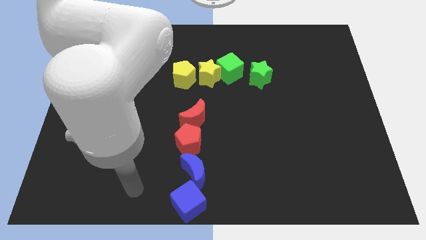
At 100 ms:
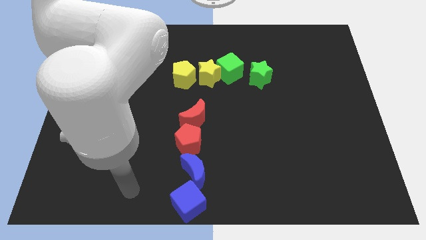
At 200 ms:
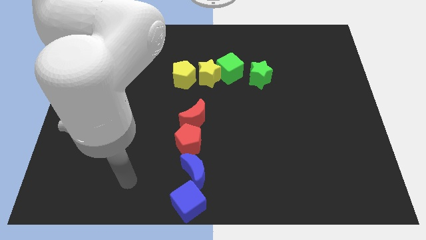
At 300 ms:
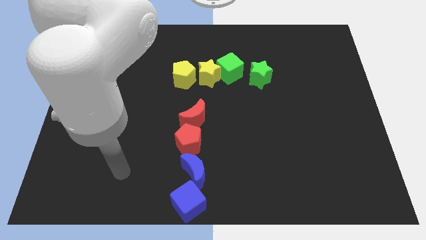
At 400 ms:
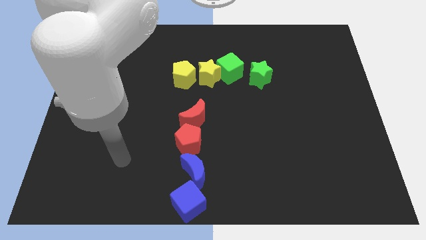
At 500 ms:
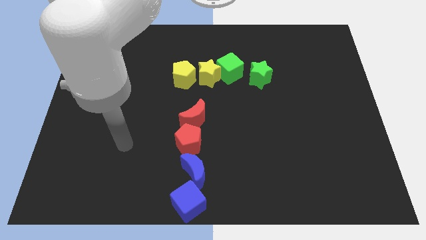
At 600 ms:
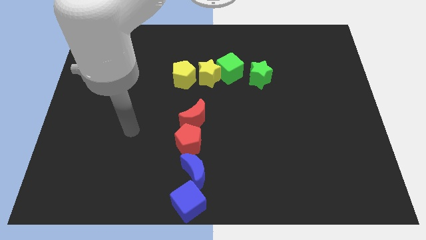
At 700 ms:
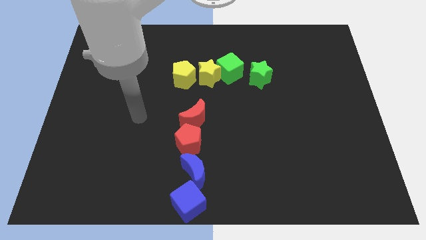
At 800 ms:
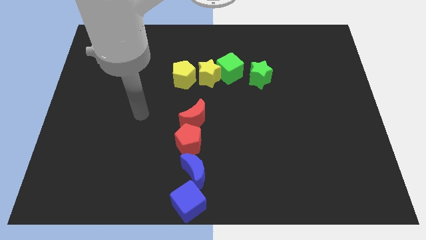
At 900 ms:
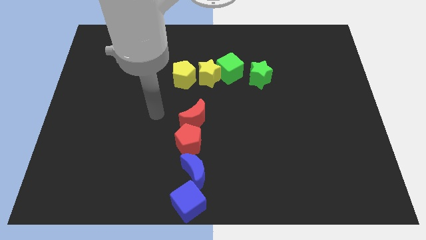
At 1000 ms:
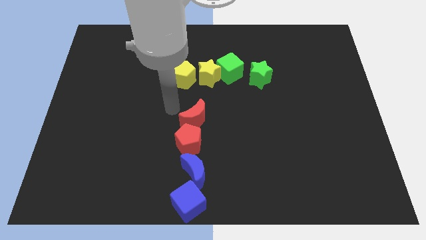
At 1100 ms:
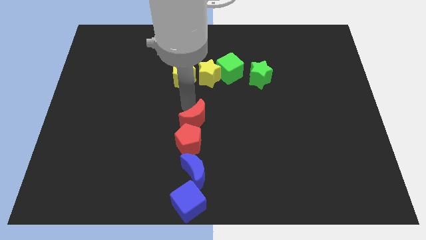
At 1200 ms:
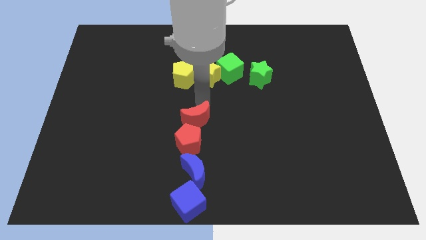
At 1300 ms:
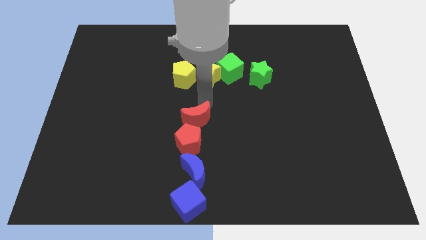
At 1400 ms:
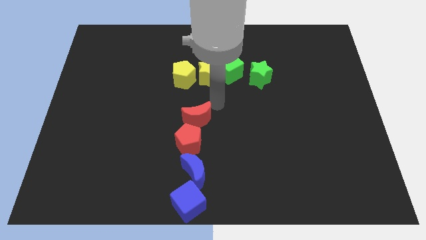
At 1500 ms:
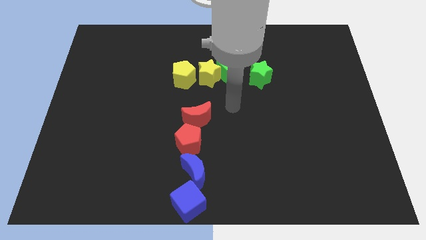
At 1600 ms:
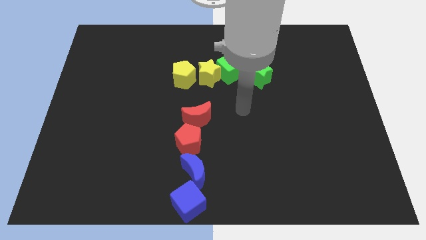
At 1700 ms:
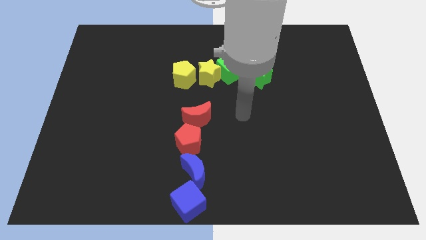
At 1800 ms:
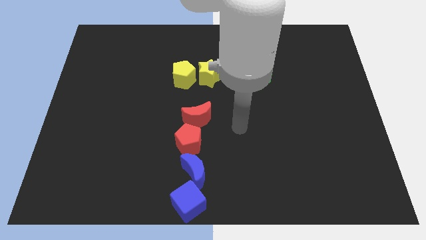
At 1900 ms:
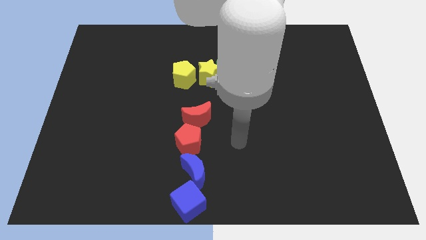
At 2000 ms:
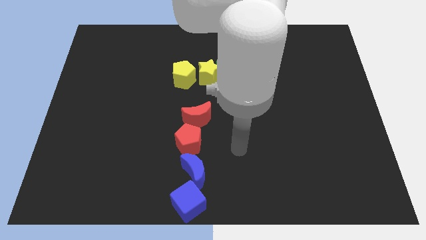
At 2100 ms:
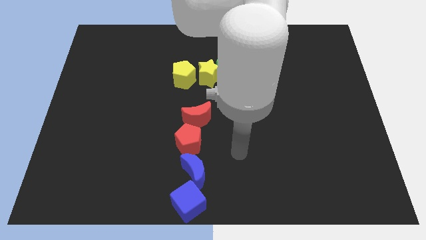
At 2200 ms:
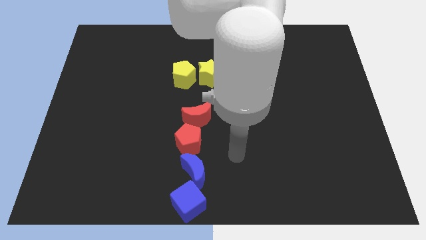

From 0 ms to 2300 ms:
move your hand towards the right of the red pentagon

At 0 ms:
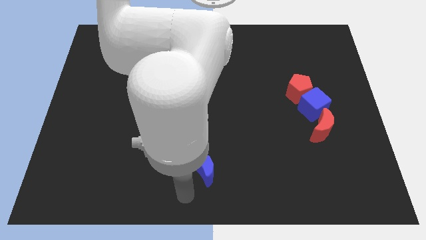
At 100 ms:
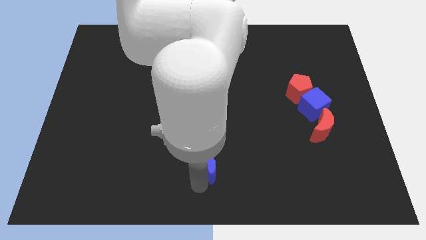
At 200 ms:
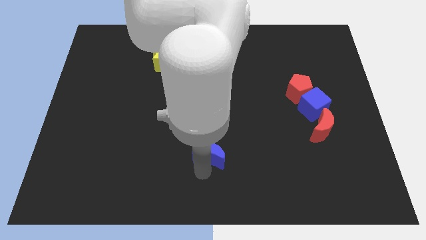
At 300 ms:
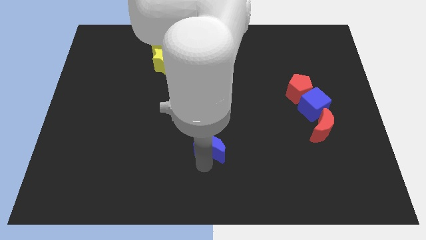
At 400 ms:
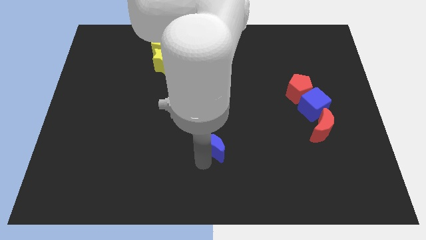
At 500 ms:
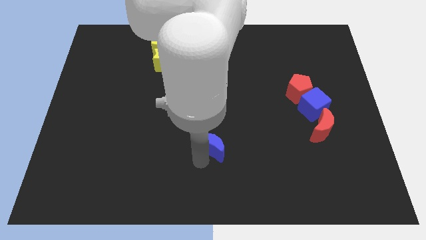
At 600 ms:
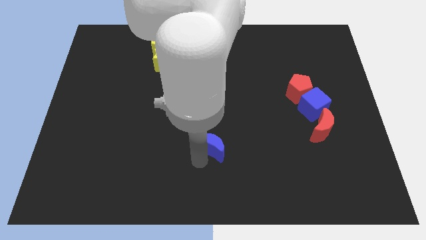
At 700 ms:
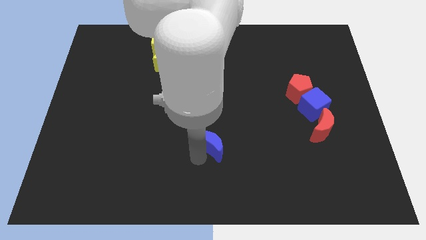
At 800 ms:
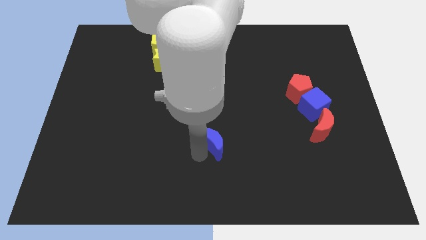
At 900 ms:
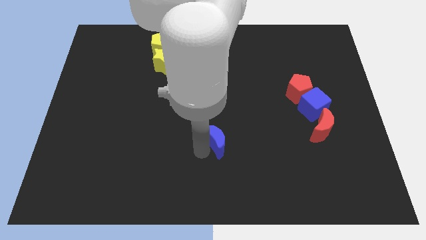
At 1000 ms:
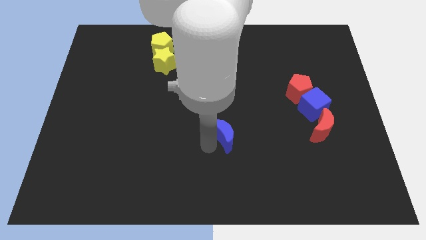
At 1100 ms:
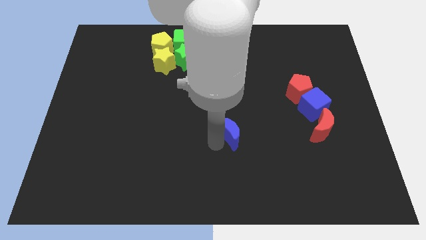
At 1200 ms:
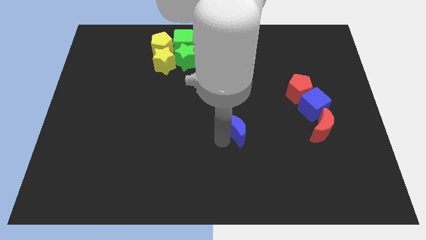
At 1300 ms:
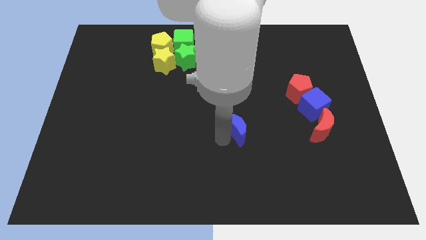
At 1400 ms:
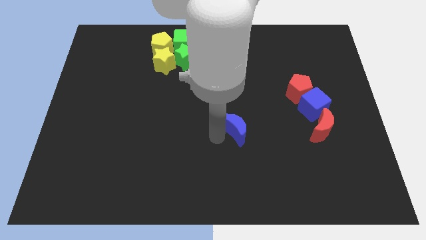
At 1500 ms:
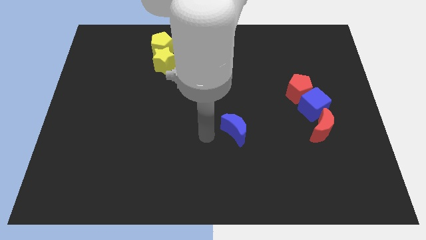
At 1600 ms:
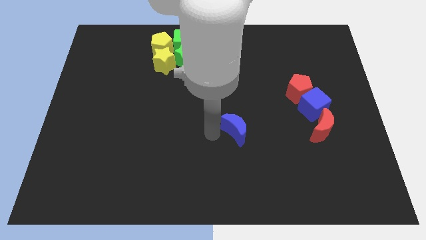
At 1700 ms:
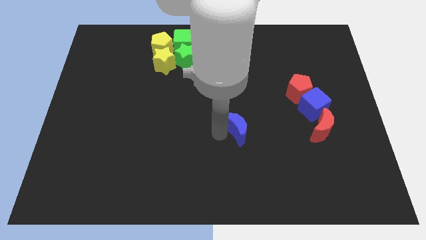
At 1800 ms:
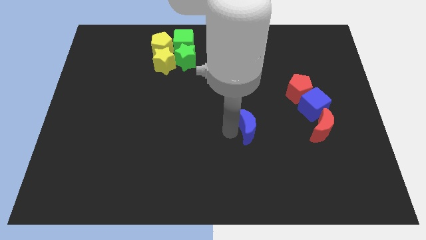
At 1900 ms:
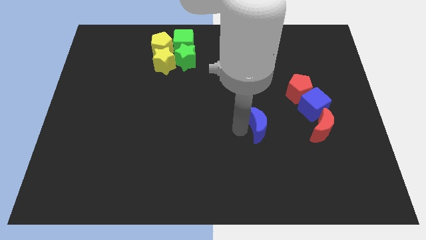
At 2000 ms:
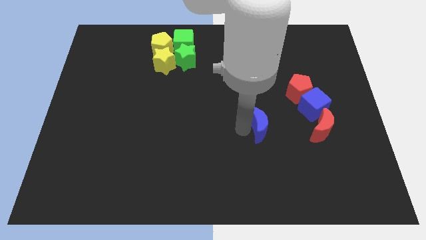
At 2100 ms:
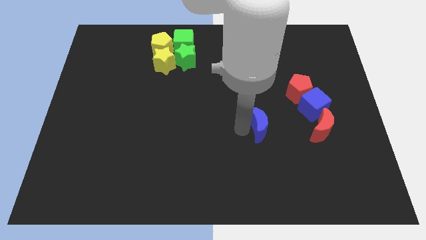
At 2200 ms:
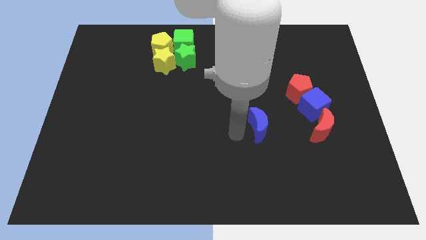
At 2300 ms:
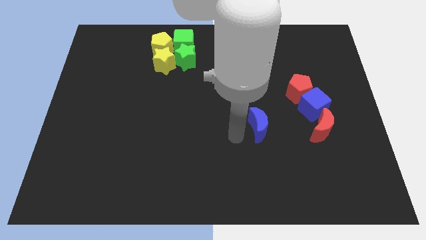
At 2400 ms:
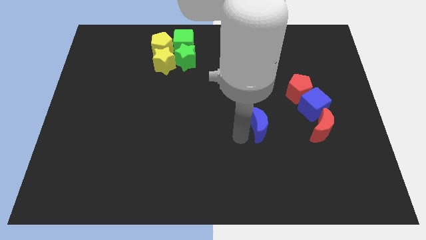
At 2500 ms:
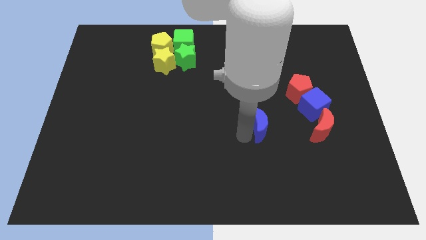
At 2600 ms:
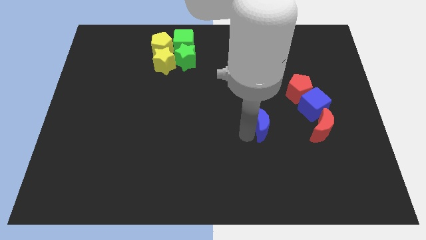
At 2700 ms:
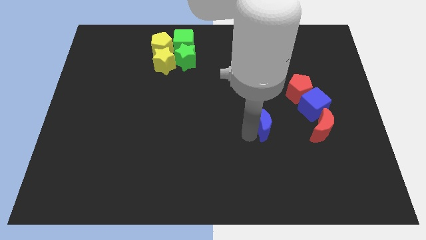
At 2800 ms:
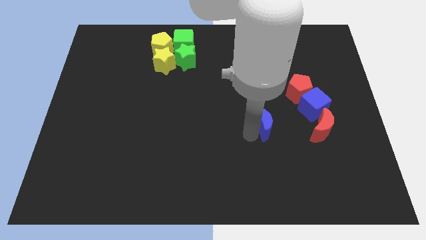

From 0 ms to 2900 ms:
move blue moon towards blue cube

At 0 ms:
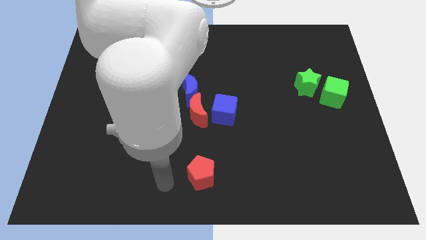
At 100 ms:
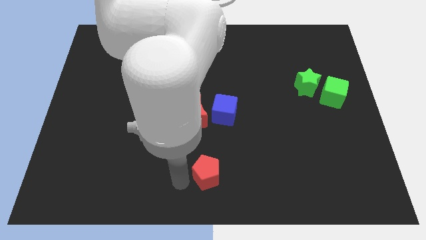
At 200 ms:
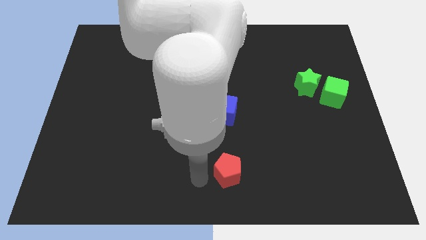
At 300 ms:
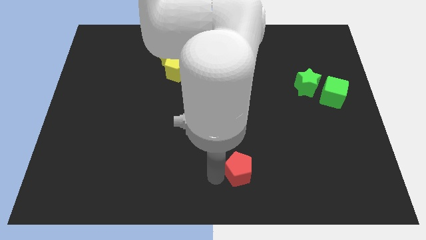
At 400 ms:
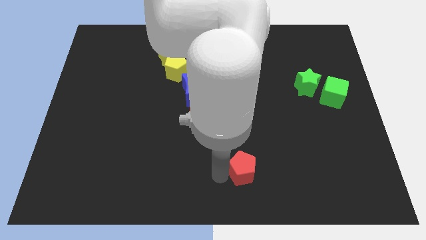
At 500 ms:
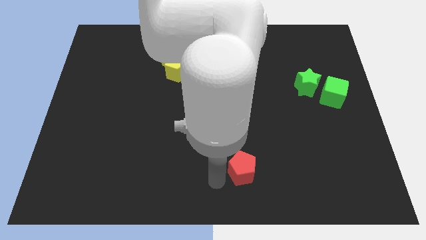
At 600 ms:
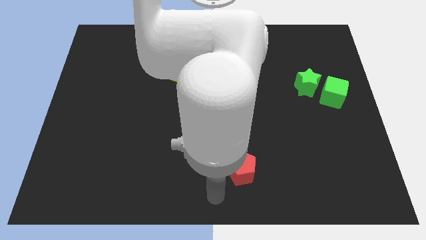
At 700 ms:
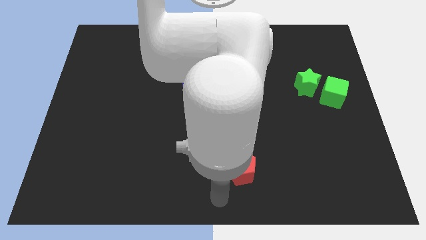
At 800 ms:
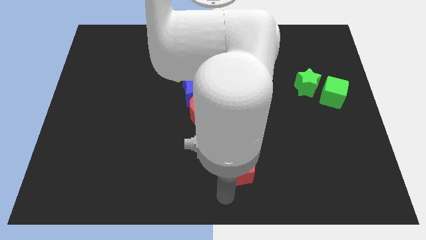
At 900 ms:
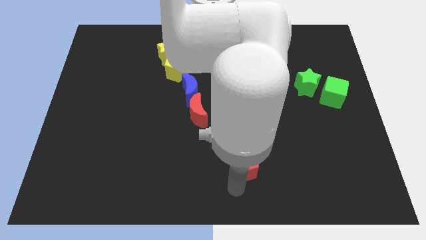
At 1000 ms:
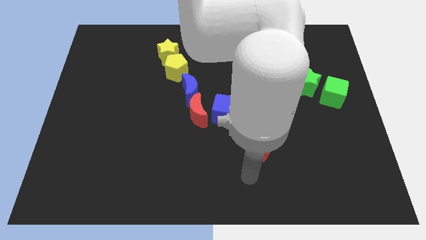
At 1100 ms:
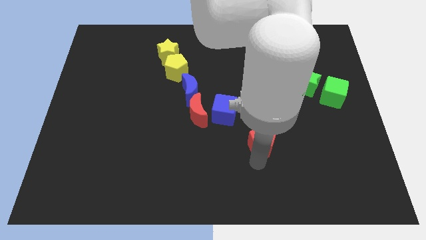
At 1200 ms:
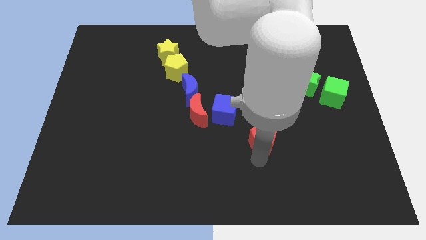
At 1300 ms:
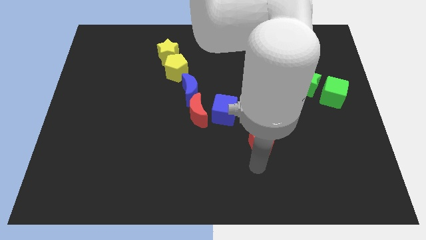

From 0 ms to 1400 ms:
slide the red pentagon diagonally on the bottom right side of the blue cube

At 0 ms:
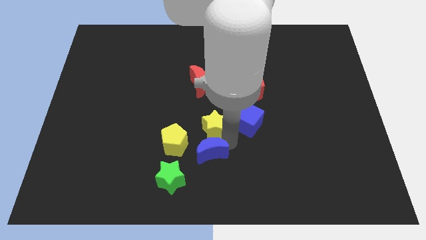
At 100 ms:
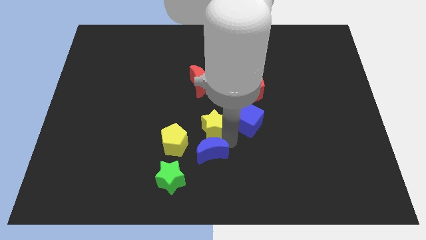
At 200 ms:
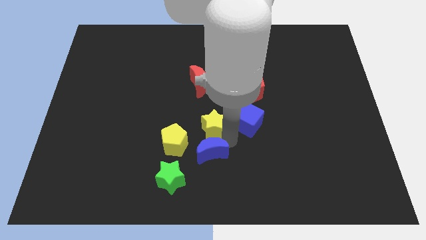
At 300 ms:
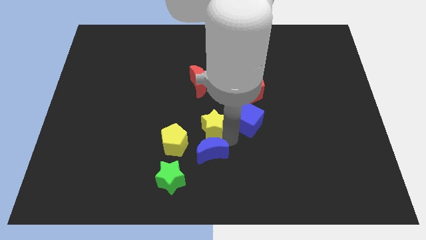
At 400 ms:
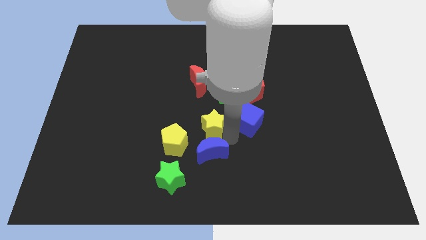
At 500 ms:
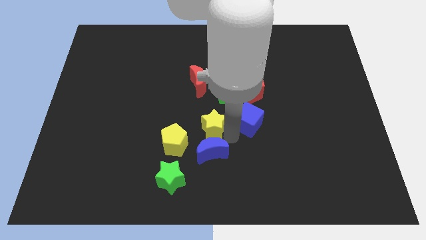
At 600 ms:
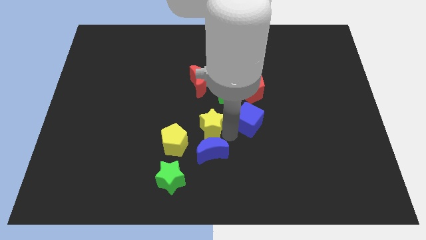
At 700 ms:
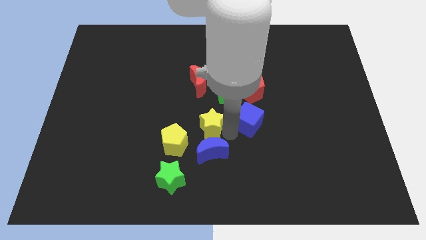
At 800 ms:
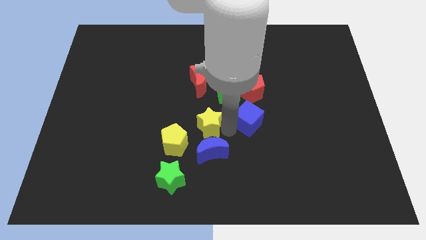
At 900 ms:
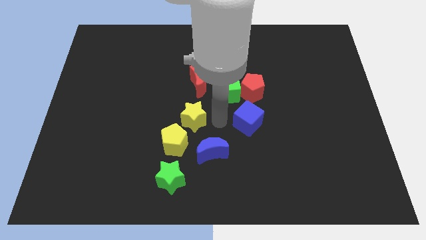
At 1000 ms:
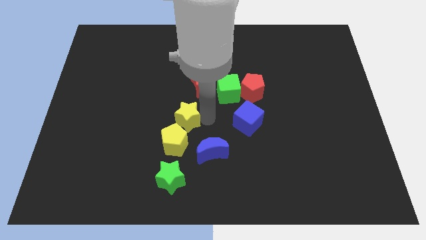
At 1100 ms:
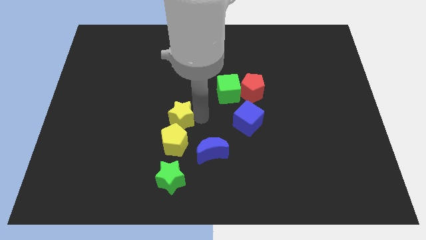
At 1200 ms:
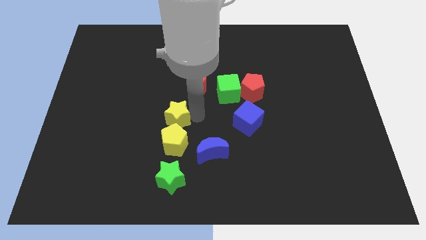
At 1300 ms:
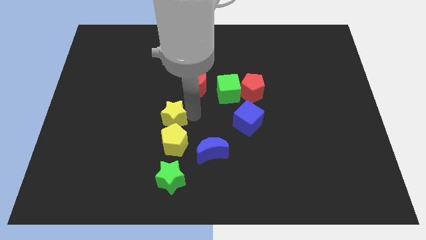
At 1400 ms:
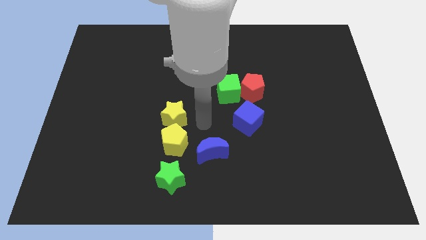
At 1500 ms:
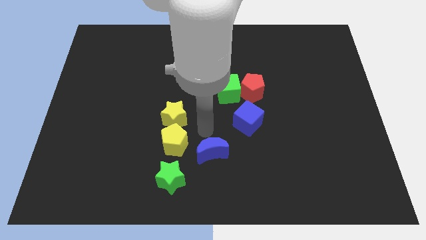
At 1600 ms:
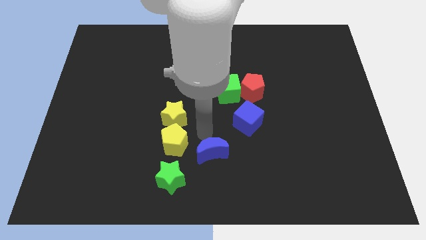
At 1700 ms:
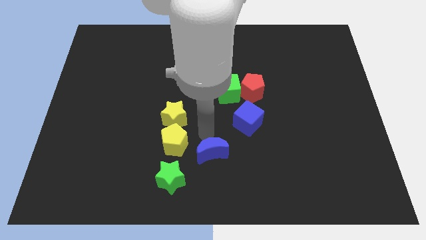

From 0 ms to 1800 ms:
move the yellow star to the top of the yellow pentagon

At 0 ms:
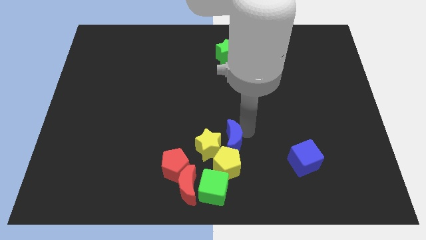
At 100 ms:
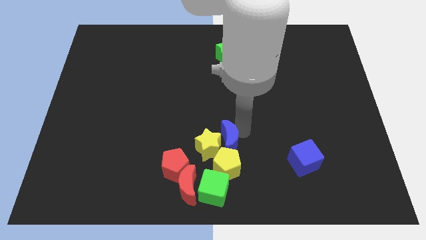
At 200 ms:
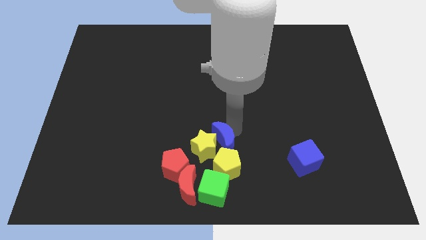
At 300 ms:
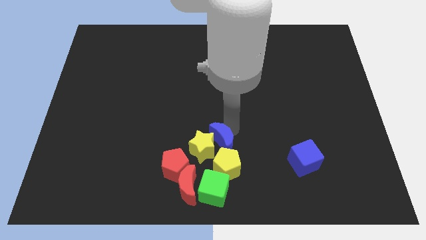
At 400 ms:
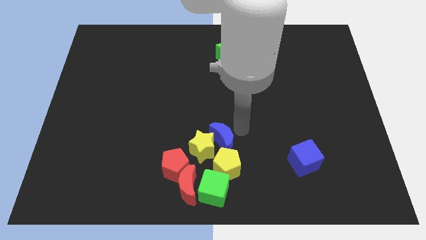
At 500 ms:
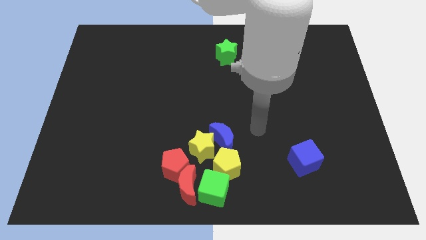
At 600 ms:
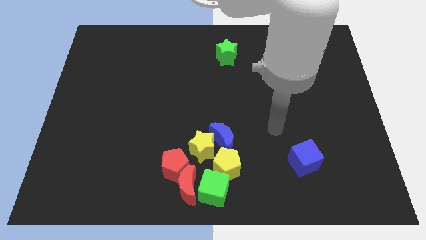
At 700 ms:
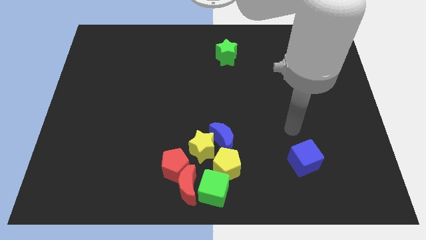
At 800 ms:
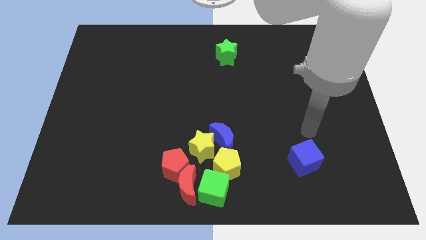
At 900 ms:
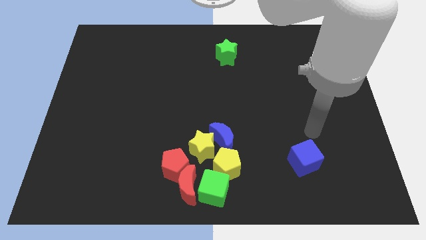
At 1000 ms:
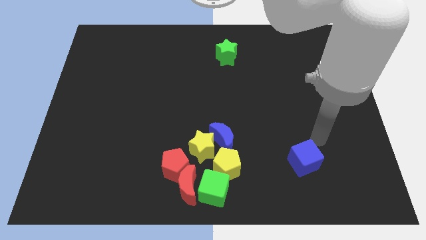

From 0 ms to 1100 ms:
push the blue moon into a group of blocks
